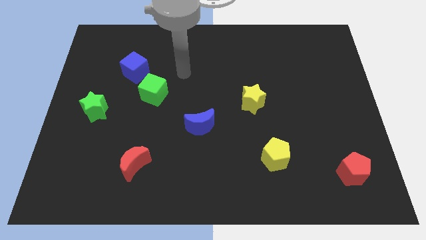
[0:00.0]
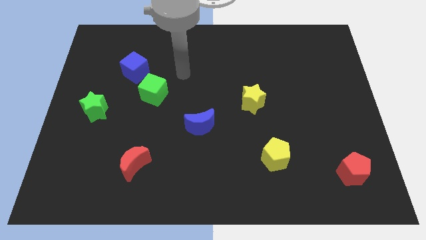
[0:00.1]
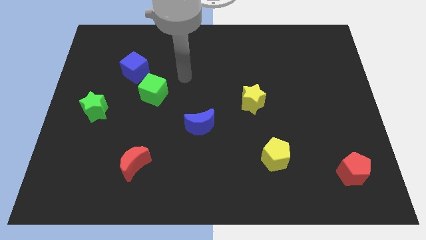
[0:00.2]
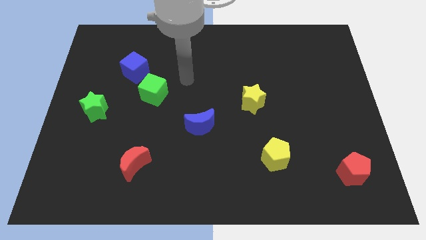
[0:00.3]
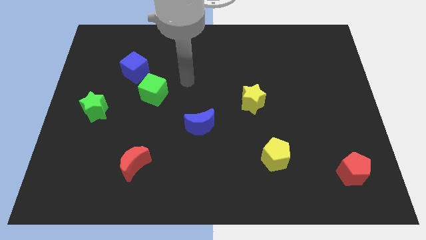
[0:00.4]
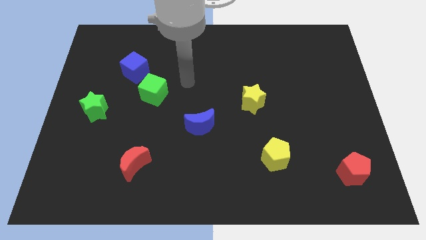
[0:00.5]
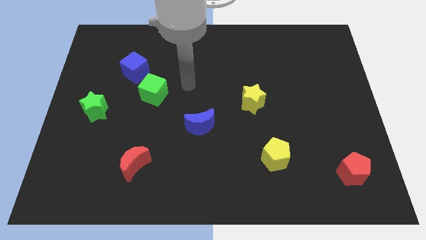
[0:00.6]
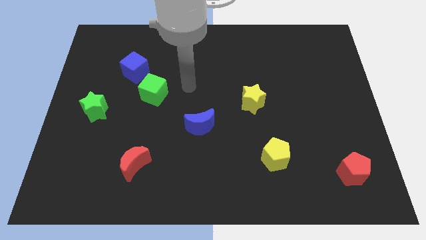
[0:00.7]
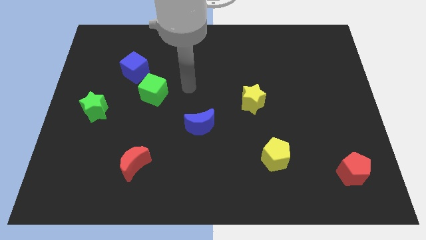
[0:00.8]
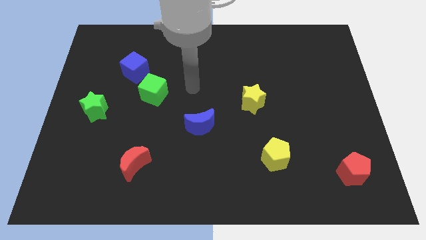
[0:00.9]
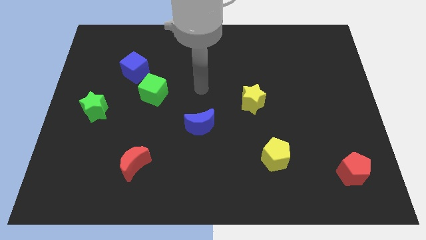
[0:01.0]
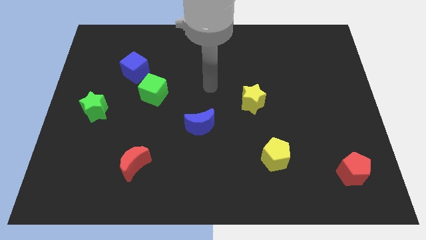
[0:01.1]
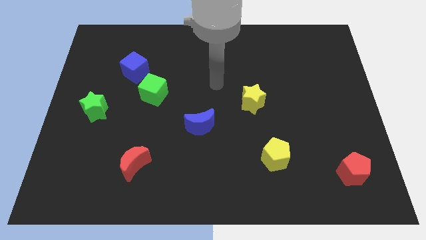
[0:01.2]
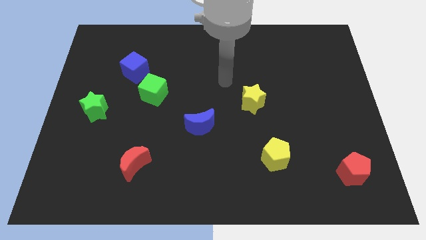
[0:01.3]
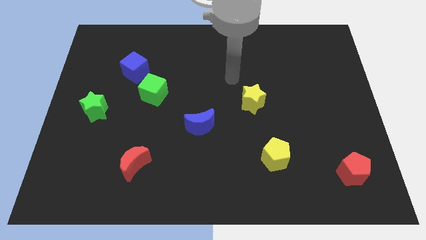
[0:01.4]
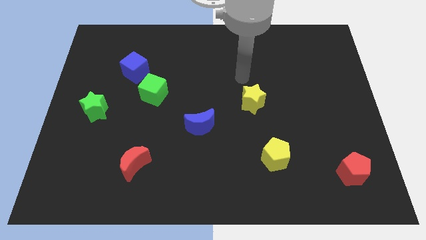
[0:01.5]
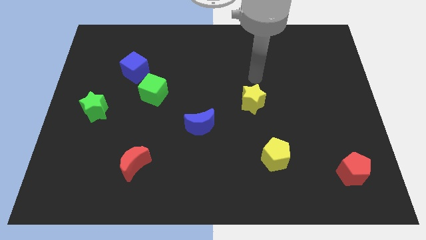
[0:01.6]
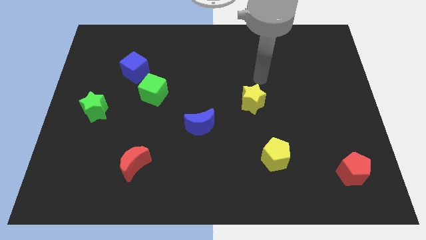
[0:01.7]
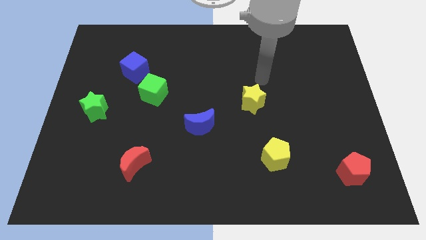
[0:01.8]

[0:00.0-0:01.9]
point your arm on the top of the yellow star

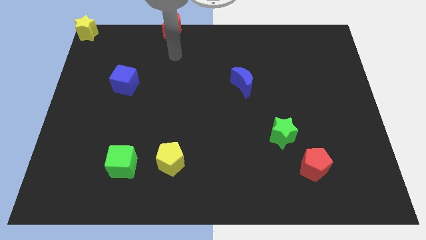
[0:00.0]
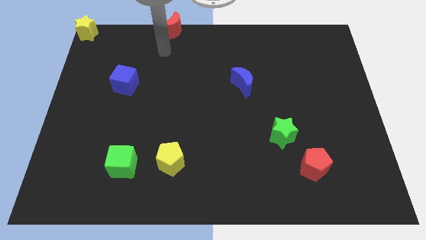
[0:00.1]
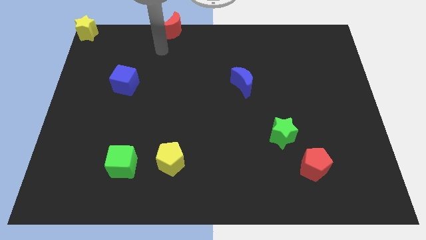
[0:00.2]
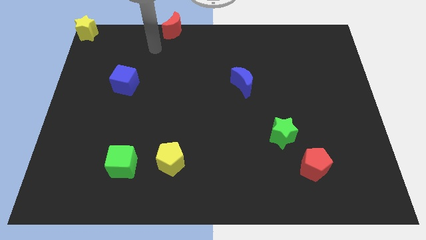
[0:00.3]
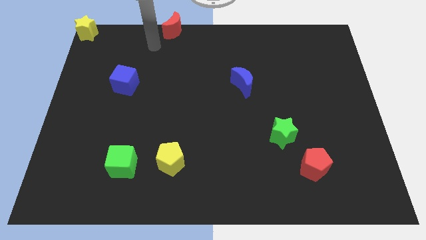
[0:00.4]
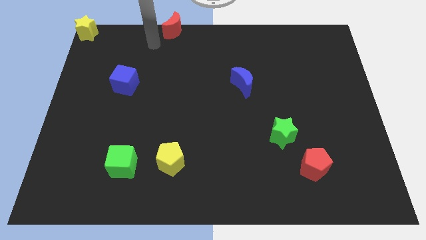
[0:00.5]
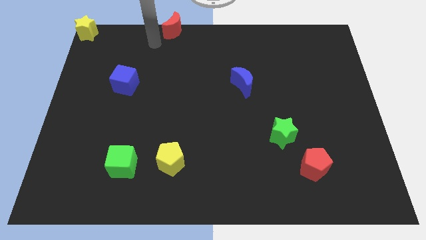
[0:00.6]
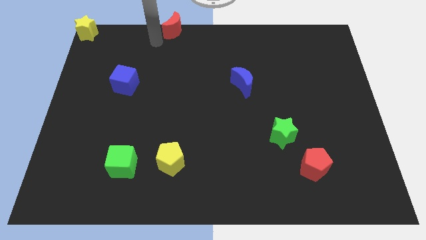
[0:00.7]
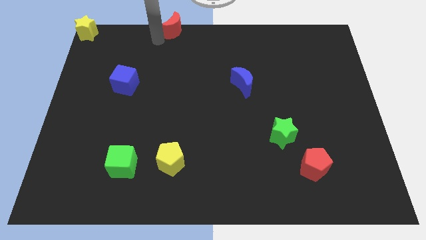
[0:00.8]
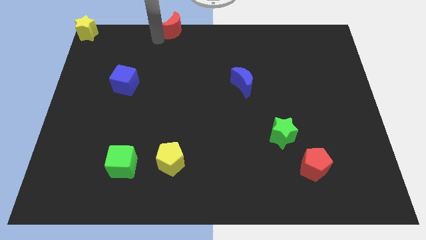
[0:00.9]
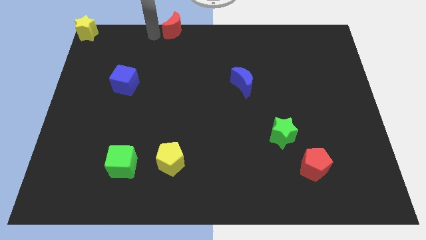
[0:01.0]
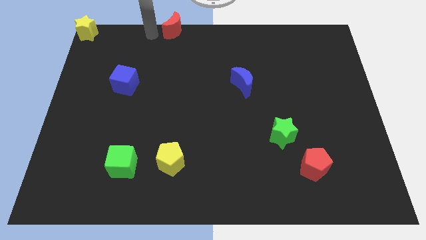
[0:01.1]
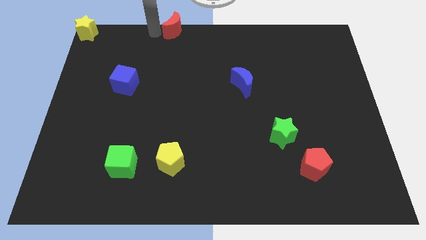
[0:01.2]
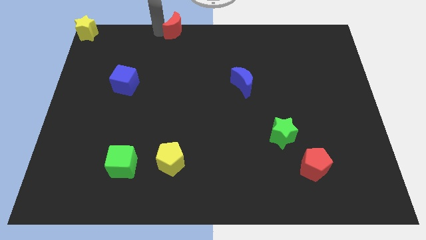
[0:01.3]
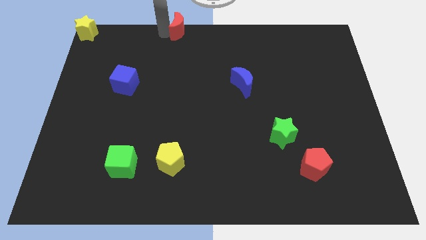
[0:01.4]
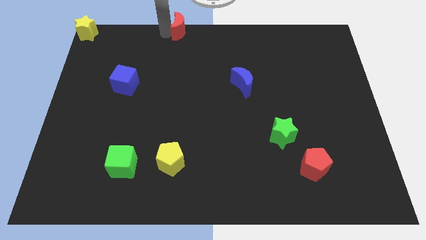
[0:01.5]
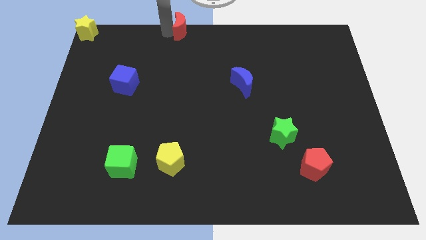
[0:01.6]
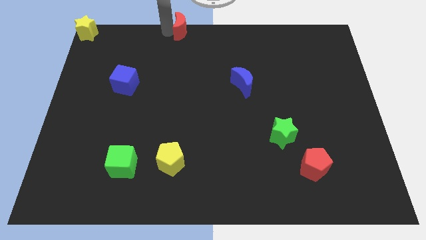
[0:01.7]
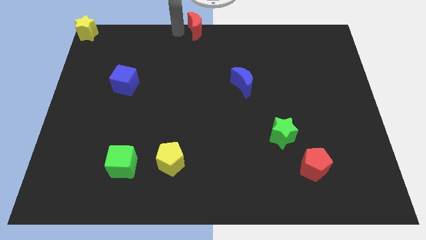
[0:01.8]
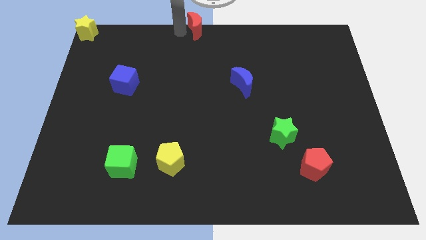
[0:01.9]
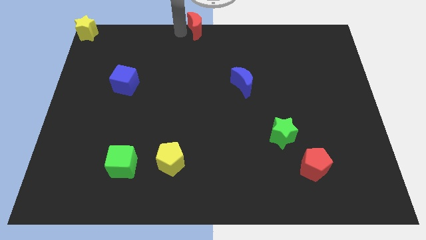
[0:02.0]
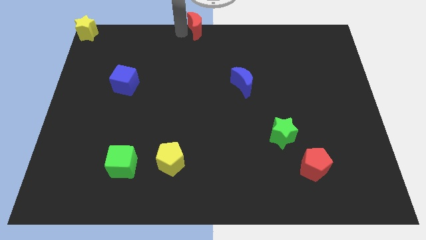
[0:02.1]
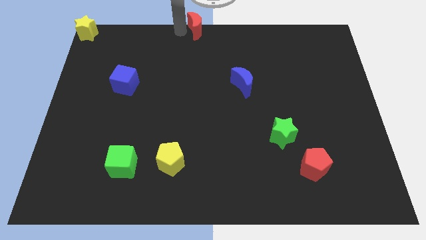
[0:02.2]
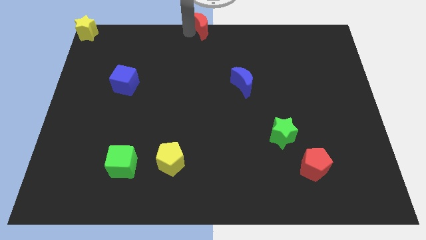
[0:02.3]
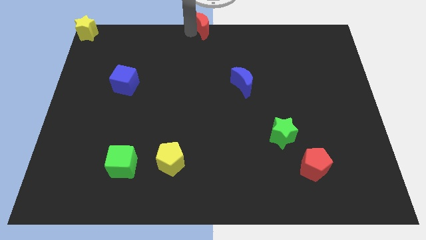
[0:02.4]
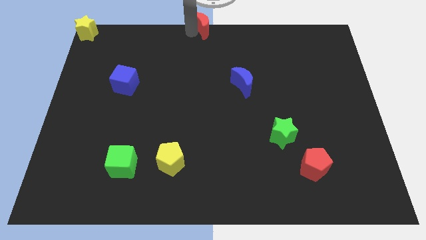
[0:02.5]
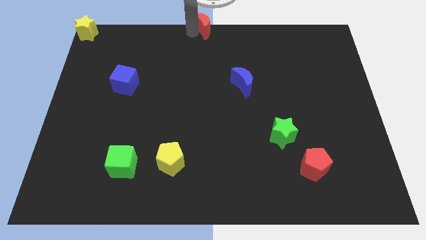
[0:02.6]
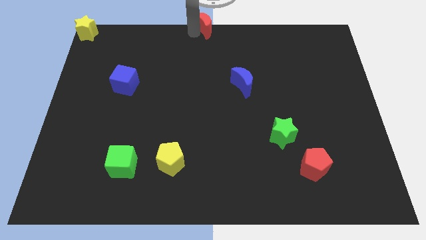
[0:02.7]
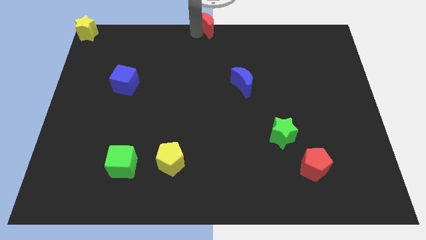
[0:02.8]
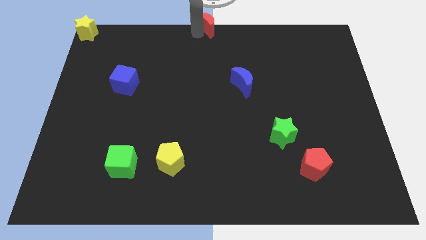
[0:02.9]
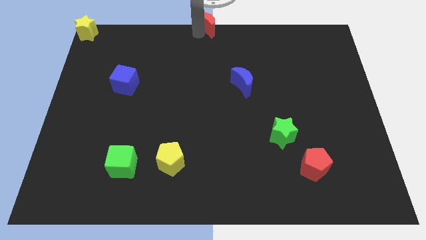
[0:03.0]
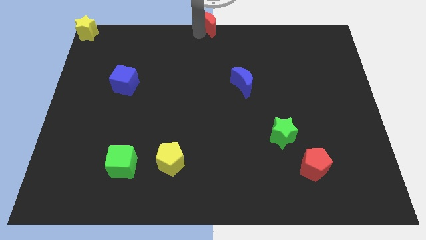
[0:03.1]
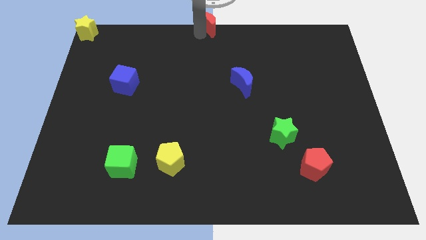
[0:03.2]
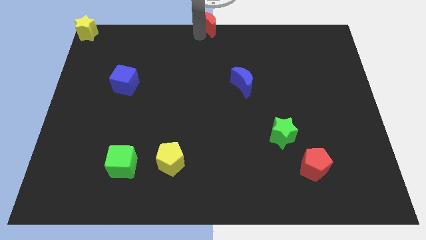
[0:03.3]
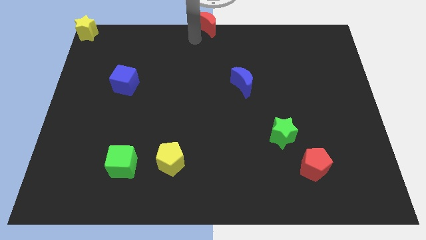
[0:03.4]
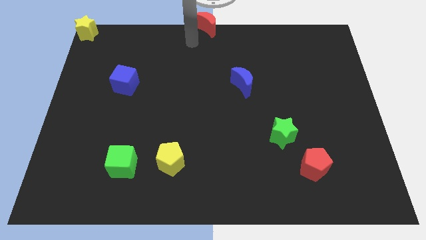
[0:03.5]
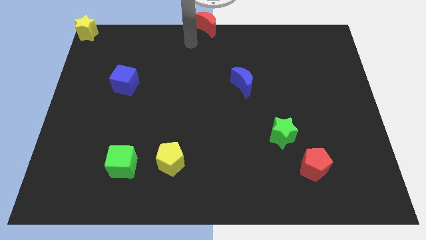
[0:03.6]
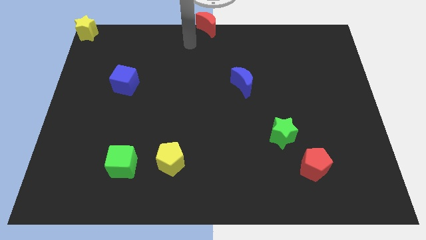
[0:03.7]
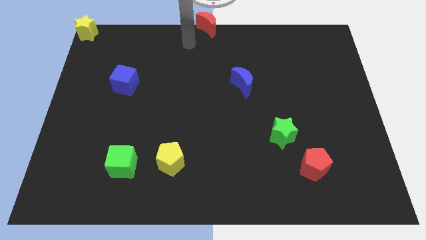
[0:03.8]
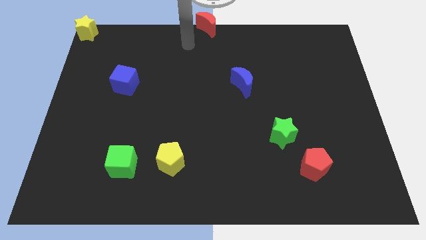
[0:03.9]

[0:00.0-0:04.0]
move red crescent to the top center

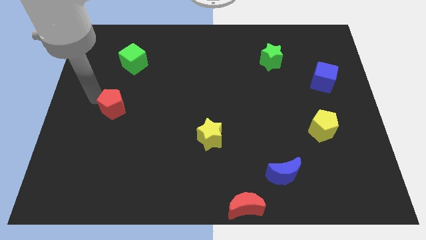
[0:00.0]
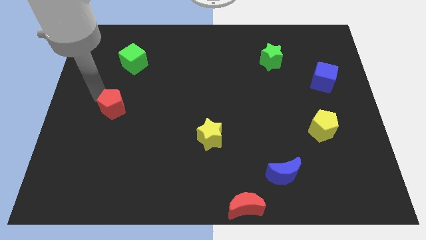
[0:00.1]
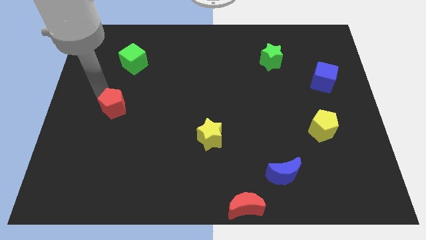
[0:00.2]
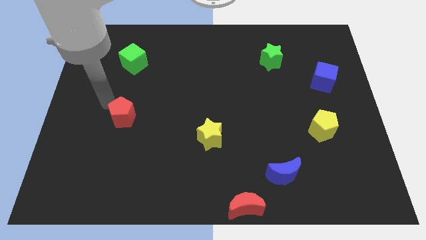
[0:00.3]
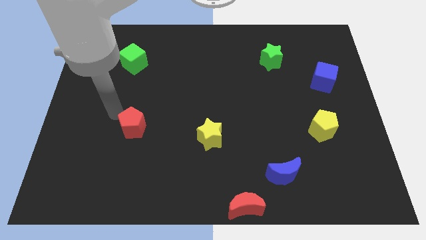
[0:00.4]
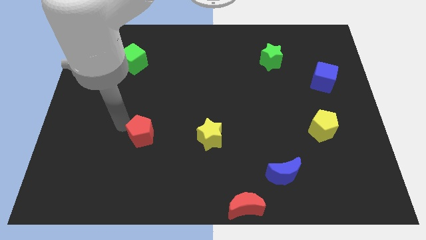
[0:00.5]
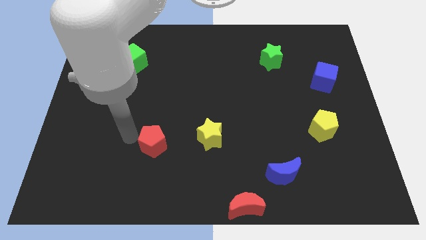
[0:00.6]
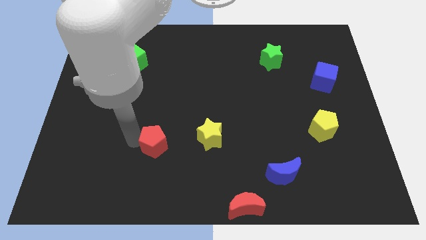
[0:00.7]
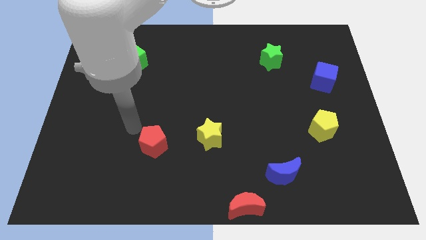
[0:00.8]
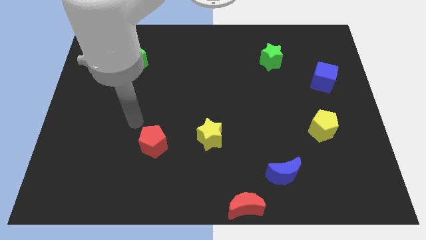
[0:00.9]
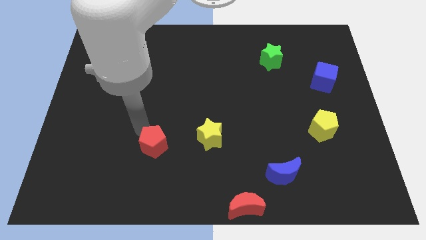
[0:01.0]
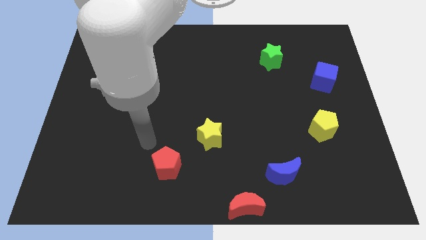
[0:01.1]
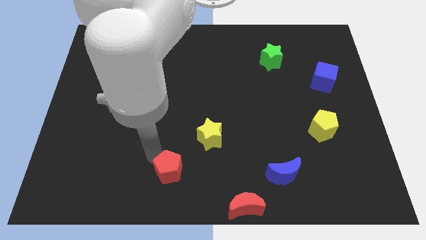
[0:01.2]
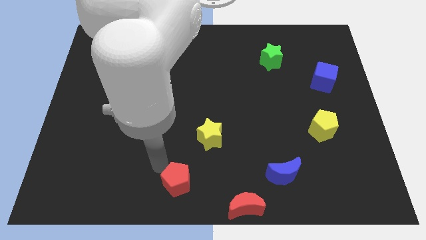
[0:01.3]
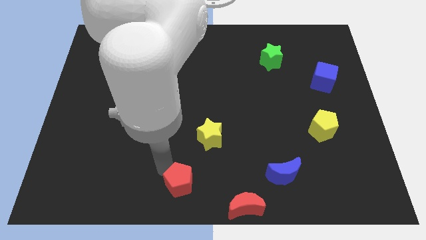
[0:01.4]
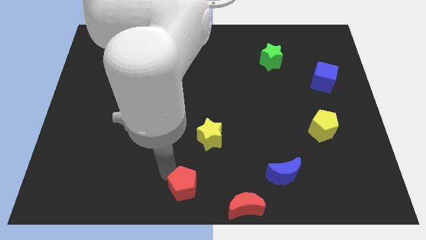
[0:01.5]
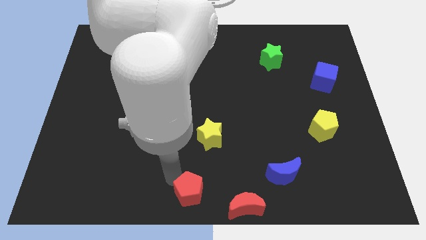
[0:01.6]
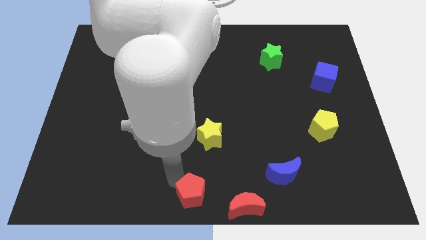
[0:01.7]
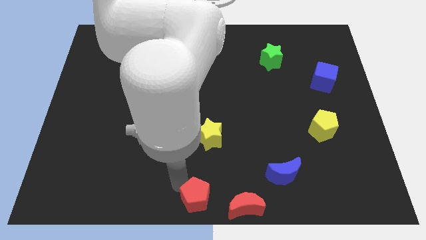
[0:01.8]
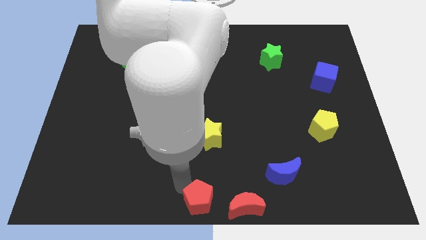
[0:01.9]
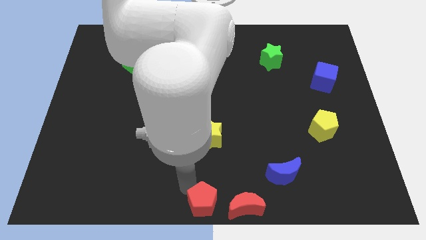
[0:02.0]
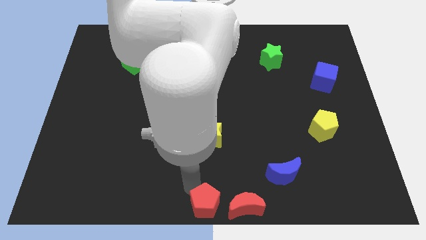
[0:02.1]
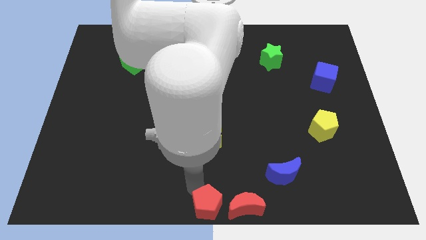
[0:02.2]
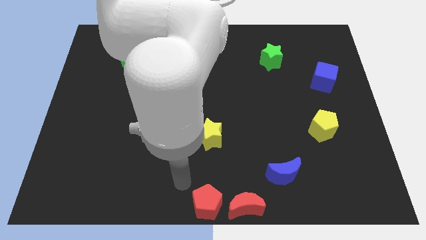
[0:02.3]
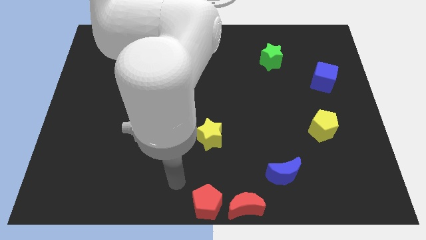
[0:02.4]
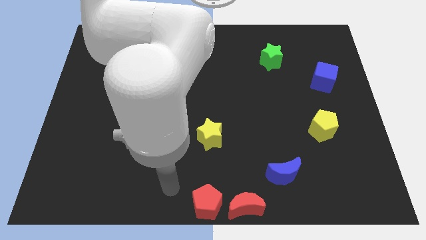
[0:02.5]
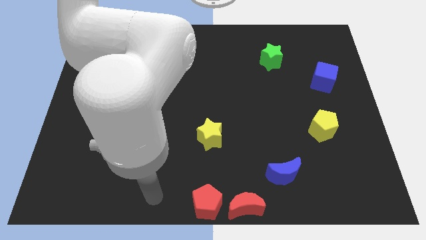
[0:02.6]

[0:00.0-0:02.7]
move the red pentagon to the left of the red moon

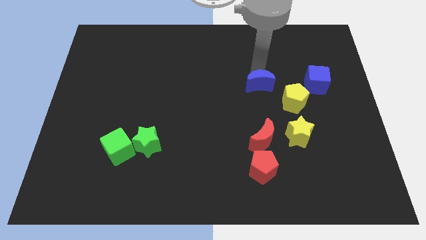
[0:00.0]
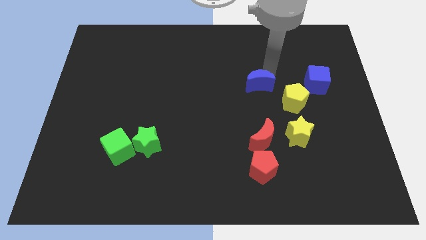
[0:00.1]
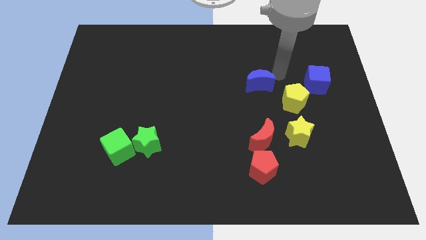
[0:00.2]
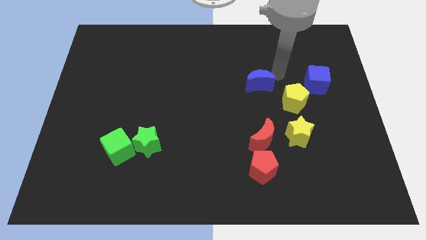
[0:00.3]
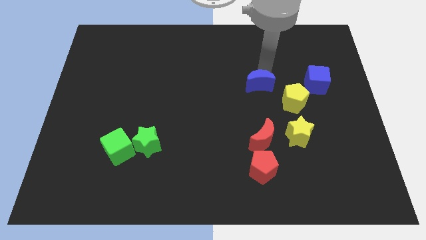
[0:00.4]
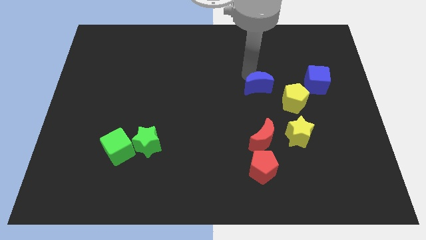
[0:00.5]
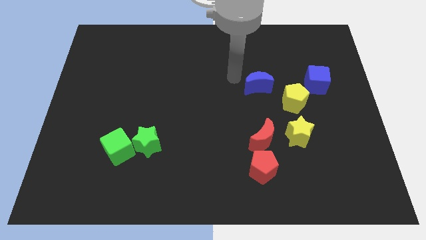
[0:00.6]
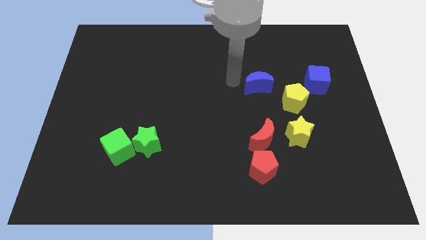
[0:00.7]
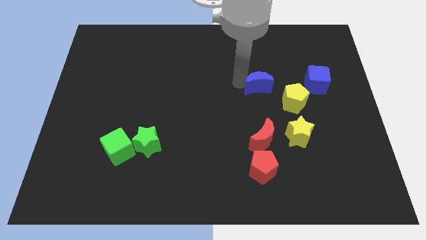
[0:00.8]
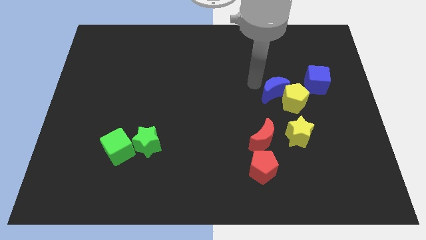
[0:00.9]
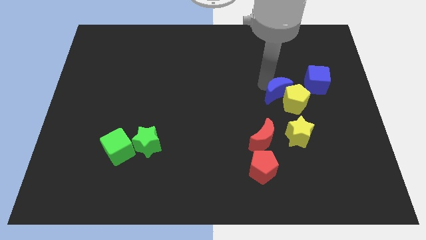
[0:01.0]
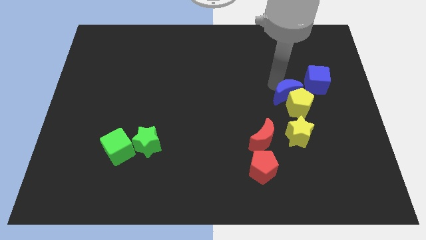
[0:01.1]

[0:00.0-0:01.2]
push the blue crescent into yellow pentagon
